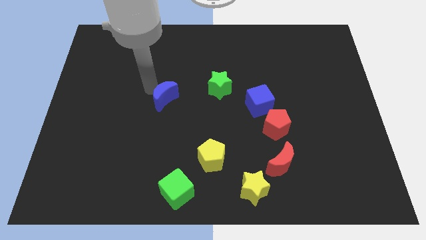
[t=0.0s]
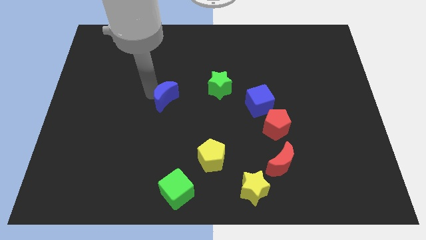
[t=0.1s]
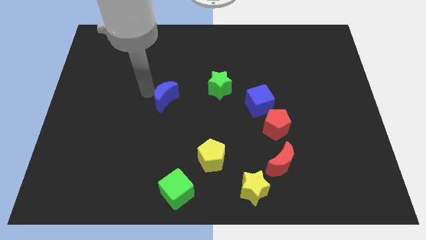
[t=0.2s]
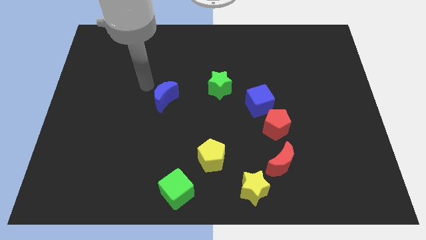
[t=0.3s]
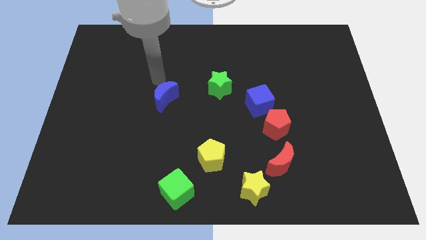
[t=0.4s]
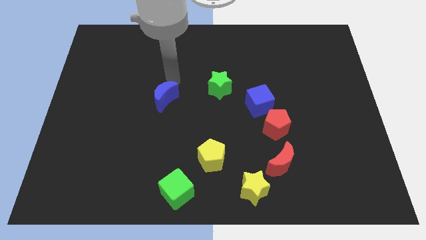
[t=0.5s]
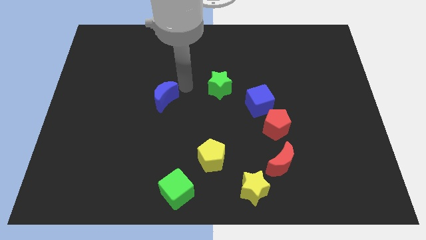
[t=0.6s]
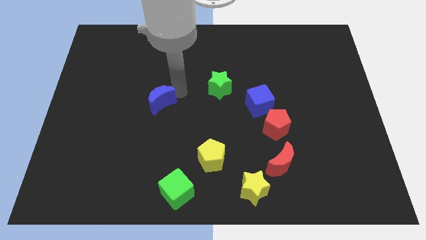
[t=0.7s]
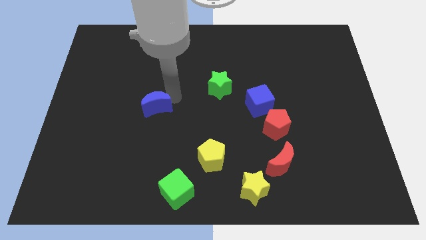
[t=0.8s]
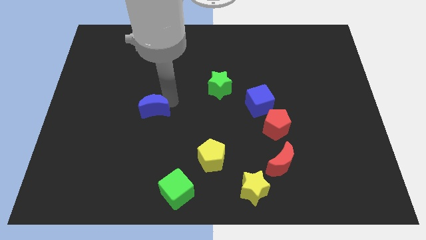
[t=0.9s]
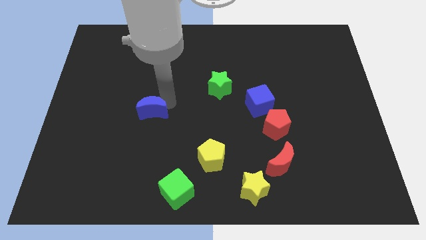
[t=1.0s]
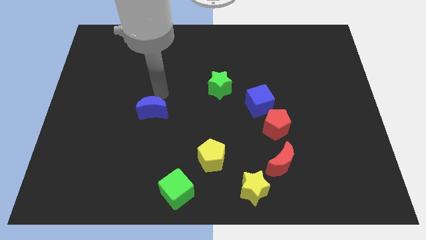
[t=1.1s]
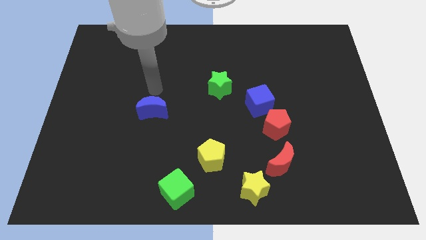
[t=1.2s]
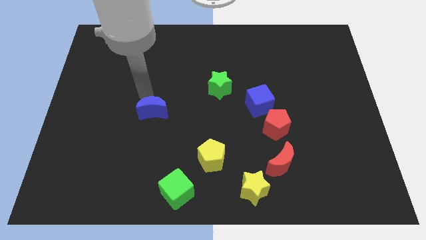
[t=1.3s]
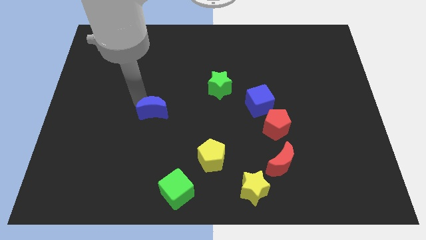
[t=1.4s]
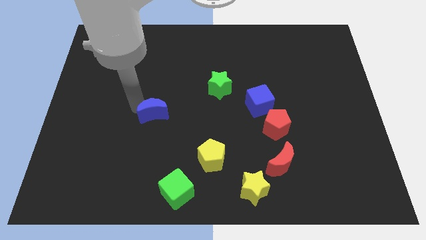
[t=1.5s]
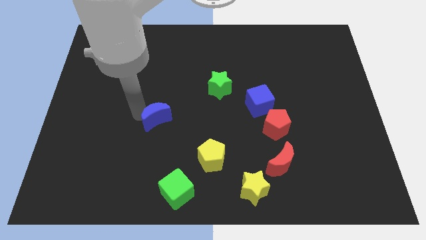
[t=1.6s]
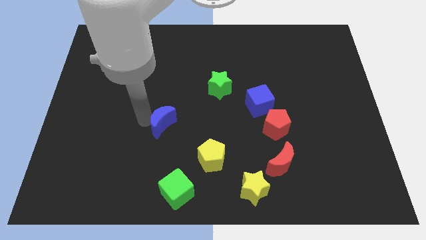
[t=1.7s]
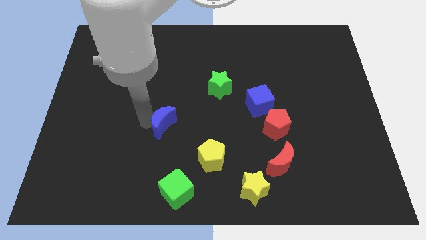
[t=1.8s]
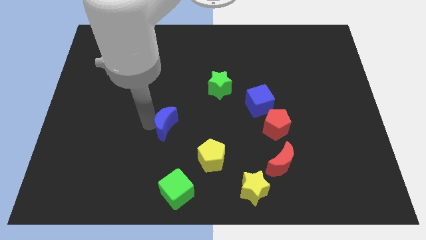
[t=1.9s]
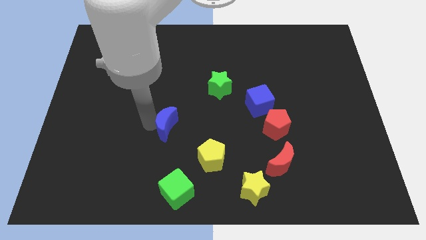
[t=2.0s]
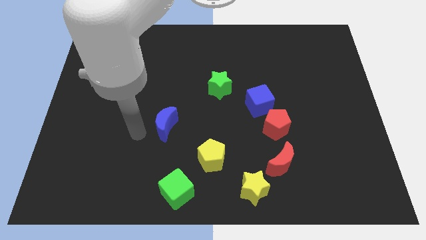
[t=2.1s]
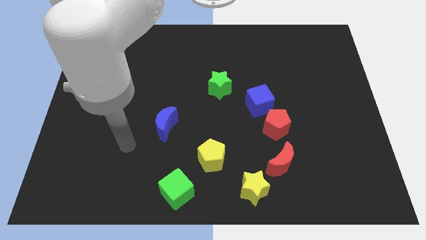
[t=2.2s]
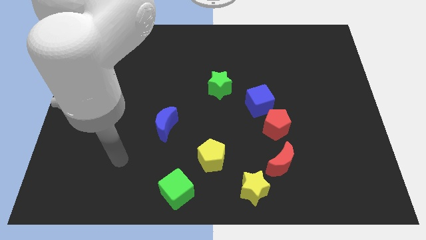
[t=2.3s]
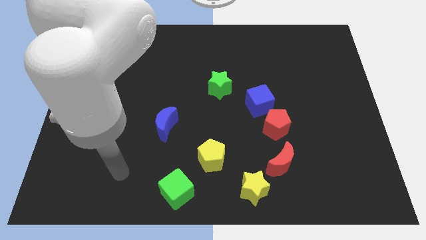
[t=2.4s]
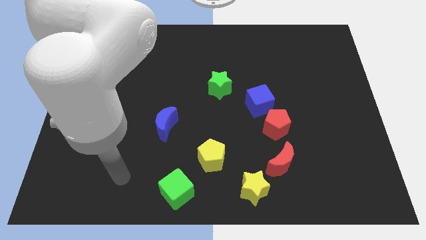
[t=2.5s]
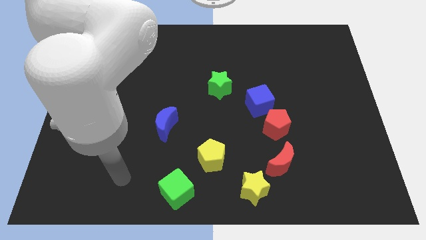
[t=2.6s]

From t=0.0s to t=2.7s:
place the blue moon to the center of the board

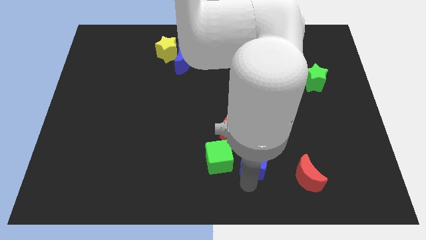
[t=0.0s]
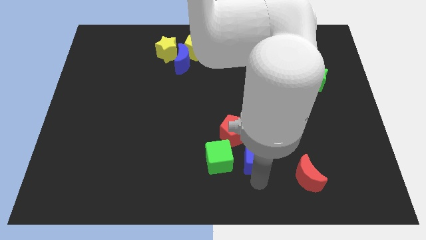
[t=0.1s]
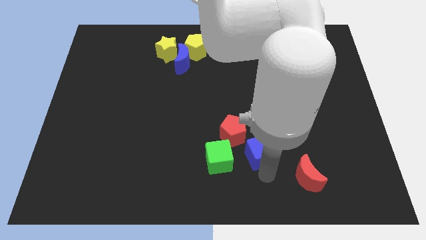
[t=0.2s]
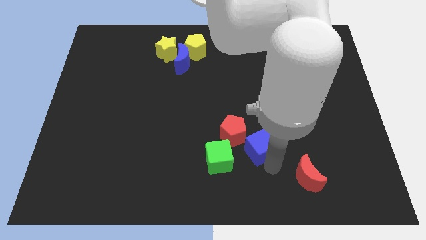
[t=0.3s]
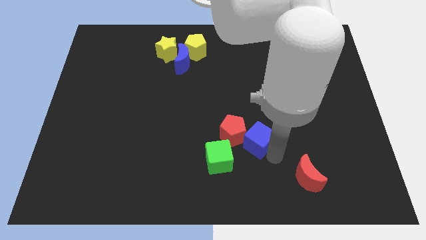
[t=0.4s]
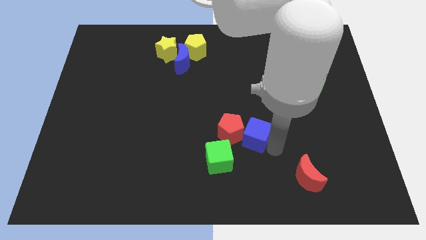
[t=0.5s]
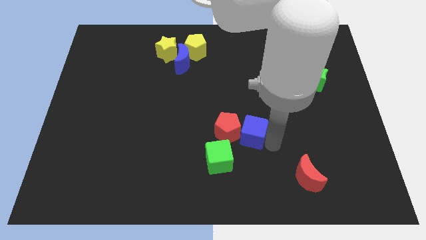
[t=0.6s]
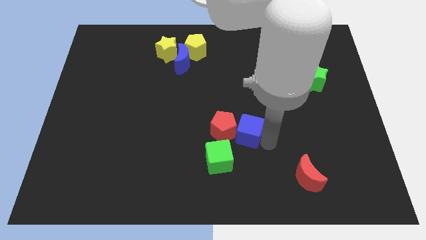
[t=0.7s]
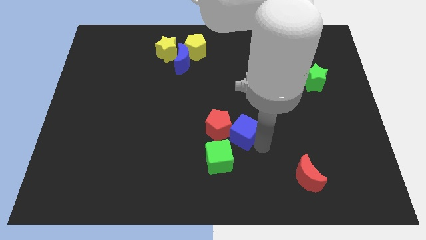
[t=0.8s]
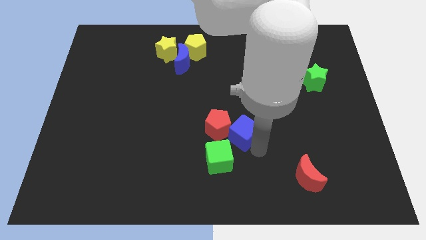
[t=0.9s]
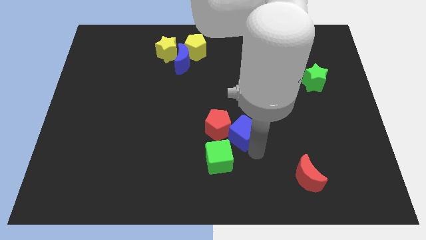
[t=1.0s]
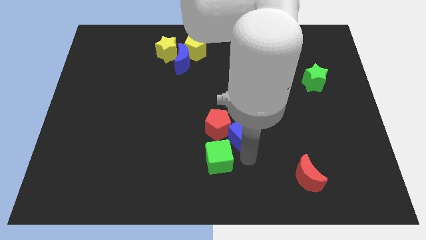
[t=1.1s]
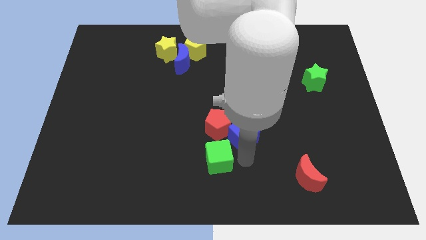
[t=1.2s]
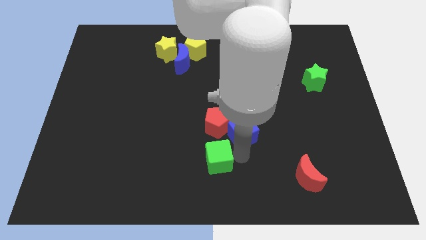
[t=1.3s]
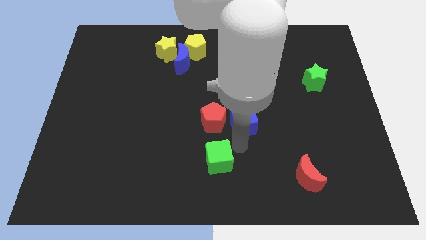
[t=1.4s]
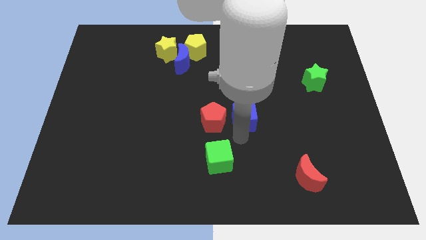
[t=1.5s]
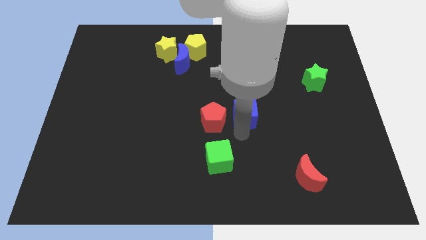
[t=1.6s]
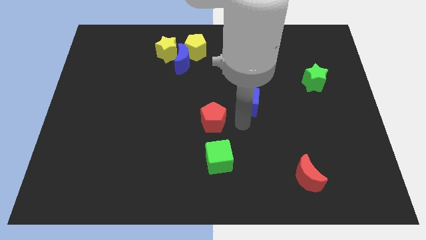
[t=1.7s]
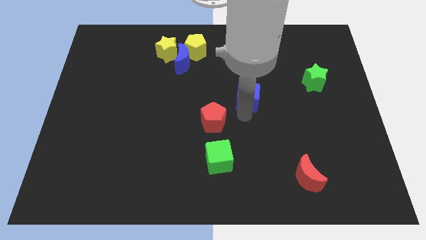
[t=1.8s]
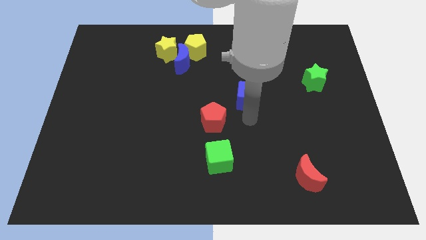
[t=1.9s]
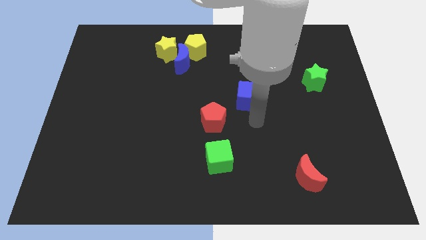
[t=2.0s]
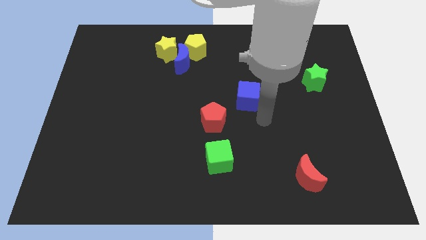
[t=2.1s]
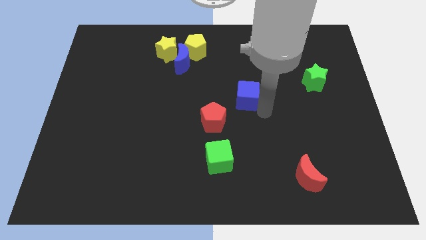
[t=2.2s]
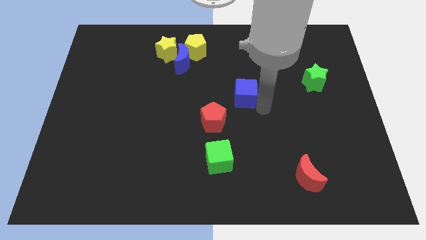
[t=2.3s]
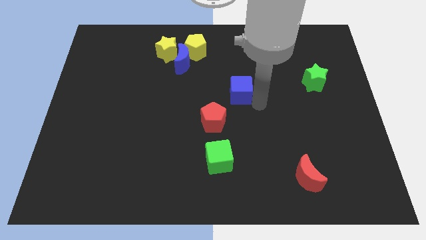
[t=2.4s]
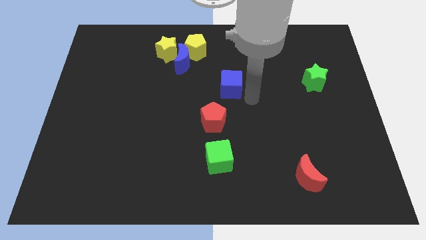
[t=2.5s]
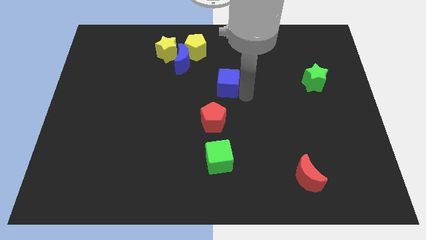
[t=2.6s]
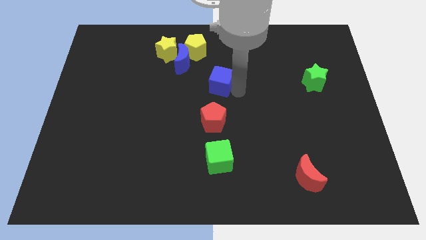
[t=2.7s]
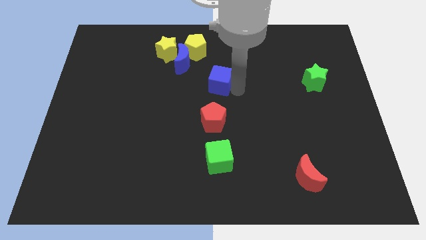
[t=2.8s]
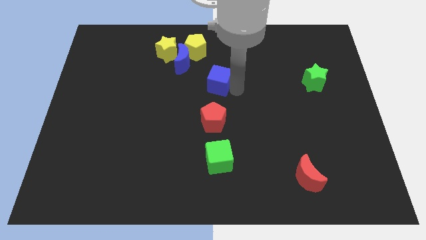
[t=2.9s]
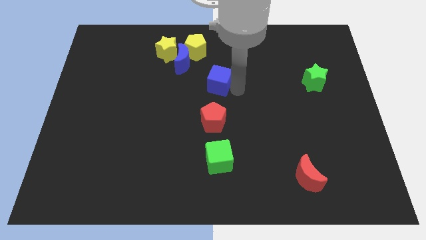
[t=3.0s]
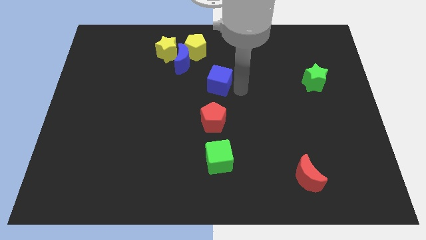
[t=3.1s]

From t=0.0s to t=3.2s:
separate blue cube from the green cube and red pentagon

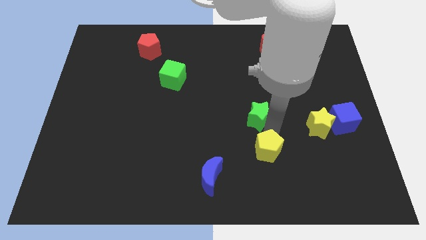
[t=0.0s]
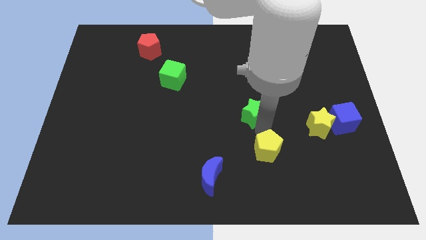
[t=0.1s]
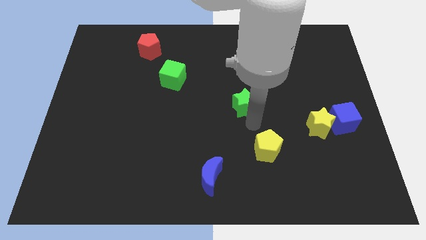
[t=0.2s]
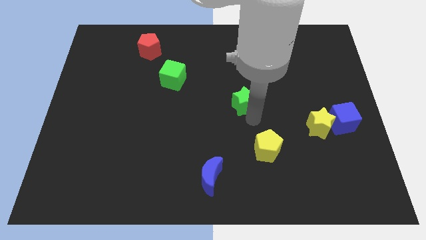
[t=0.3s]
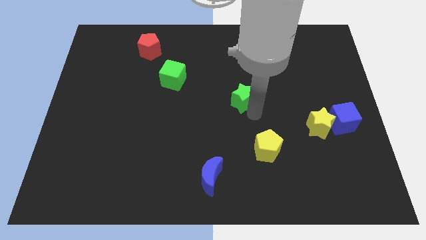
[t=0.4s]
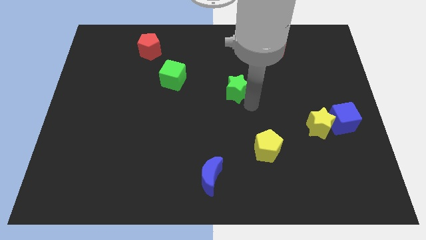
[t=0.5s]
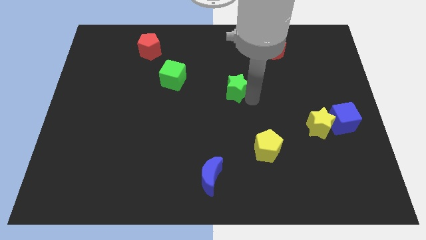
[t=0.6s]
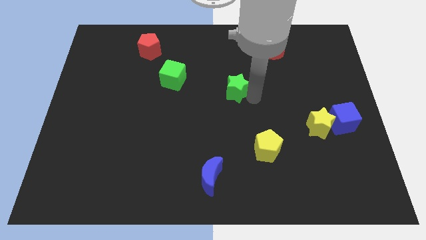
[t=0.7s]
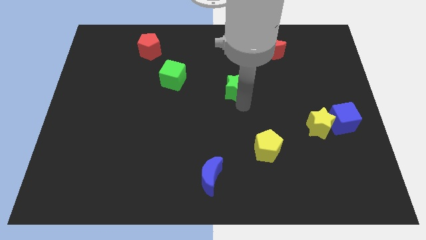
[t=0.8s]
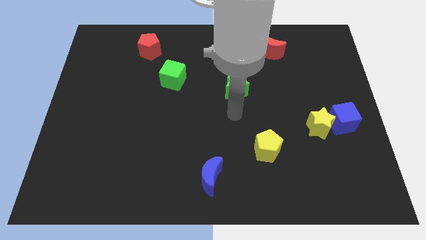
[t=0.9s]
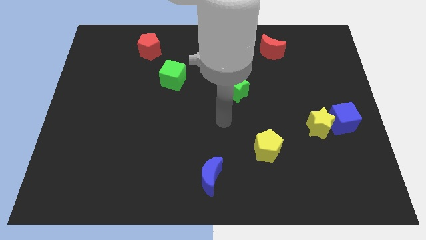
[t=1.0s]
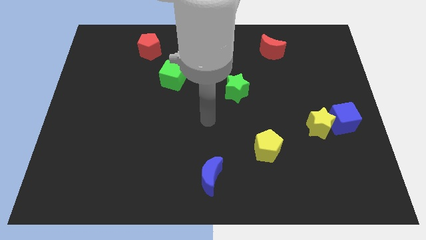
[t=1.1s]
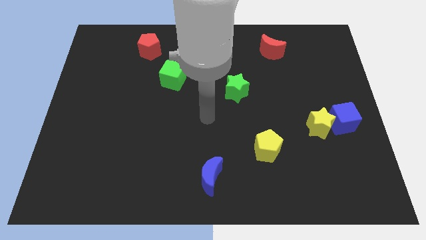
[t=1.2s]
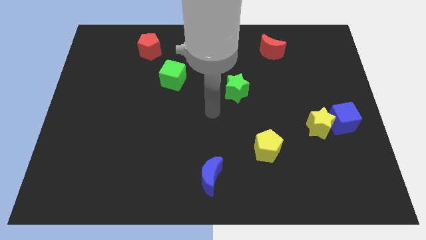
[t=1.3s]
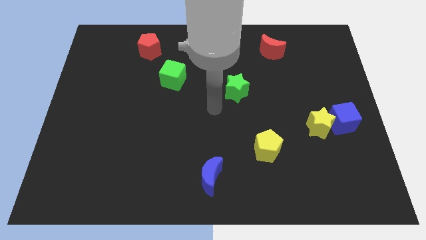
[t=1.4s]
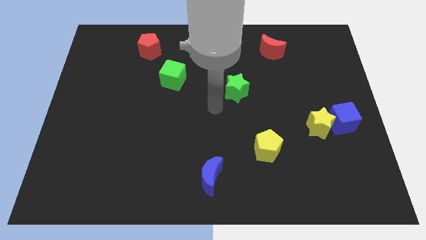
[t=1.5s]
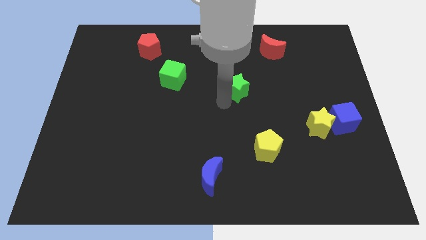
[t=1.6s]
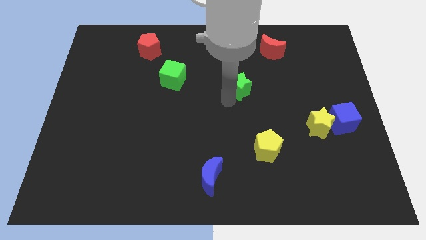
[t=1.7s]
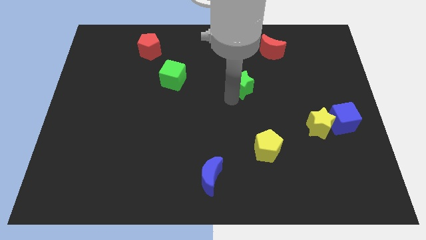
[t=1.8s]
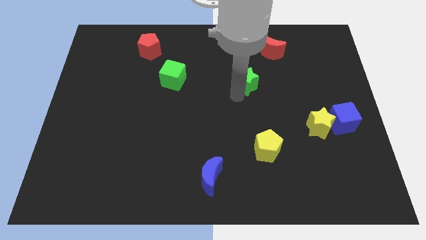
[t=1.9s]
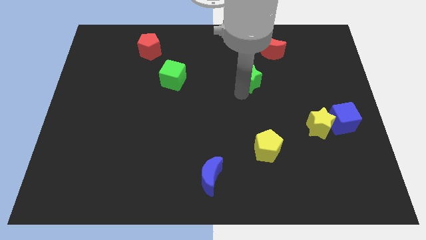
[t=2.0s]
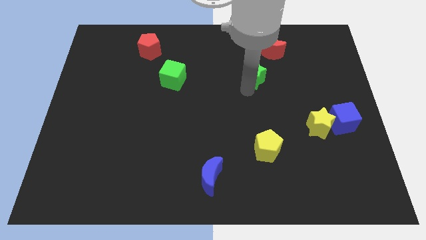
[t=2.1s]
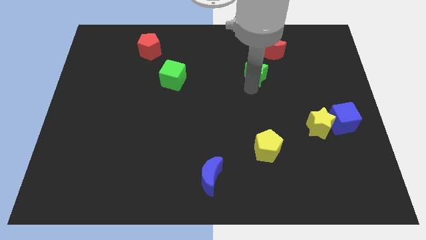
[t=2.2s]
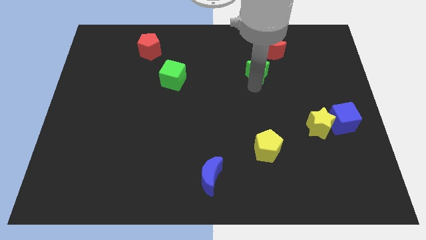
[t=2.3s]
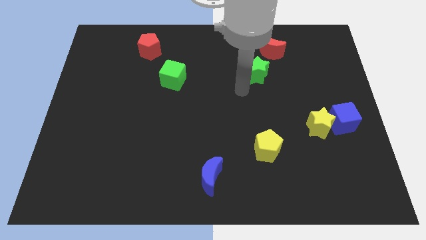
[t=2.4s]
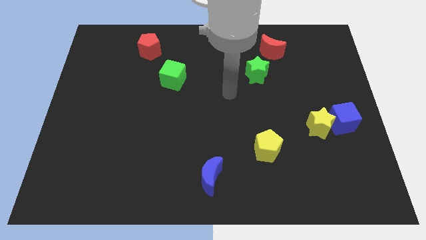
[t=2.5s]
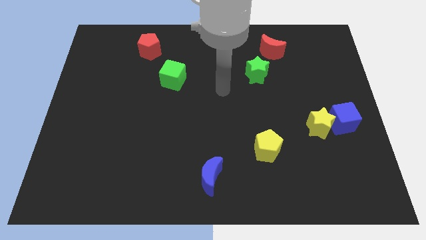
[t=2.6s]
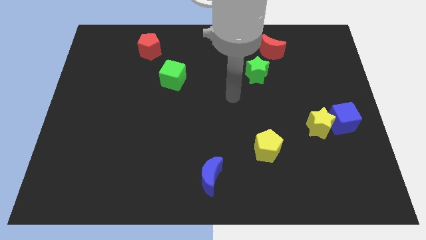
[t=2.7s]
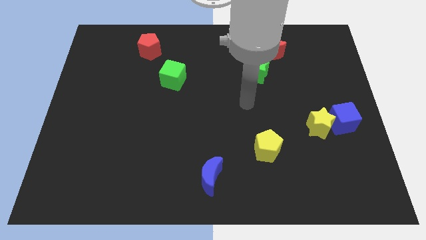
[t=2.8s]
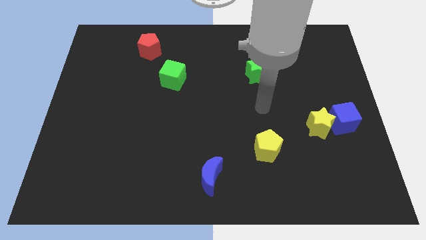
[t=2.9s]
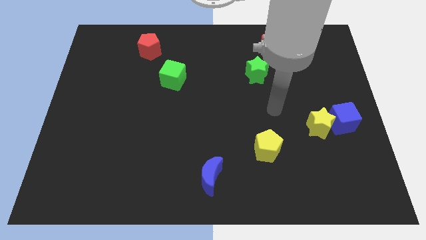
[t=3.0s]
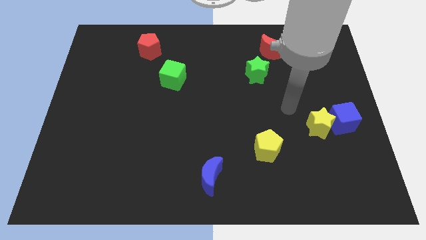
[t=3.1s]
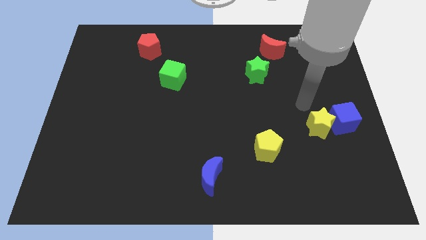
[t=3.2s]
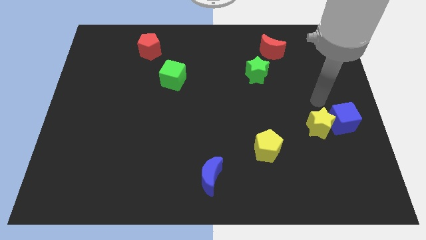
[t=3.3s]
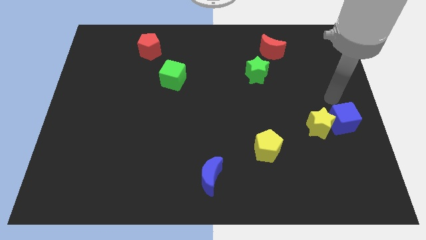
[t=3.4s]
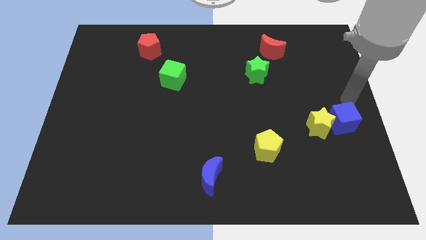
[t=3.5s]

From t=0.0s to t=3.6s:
push green star to the bottom left of red crescent
